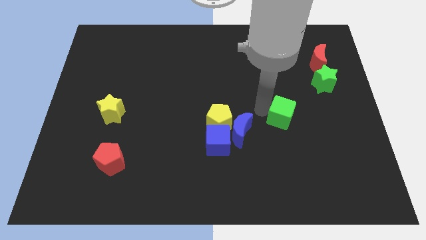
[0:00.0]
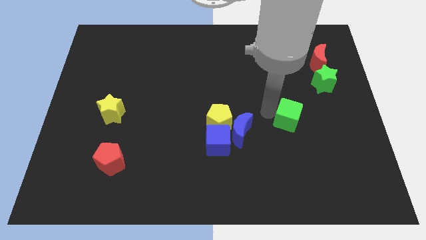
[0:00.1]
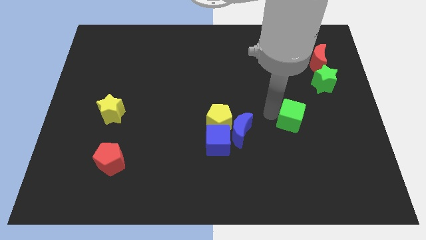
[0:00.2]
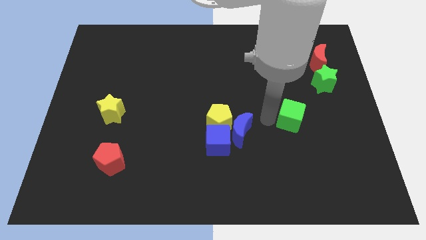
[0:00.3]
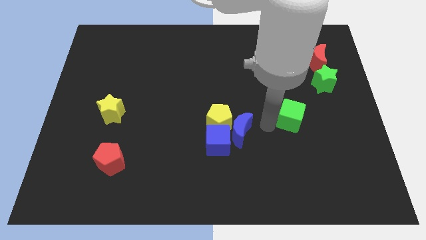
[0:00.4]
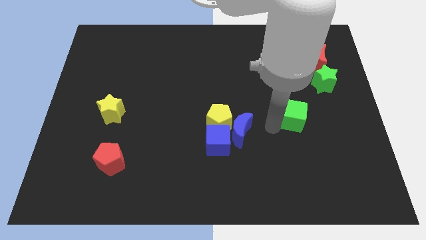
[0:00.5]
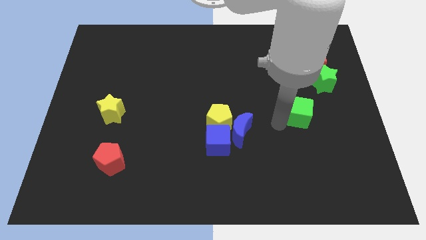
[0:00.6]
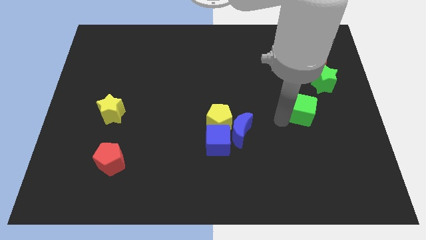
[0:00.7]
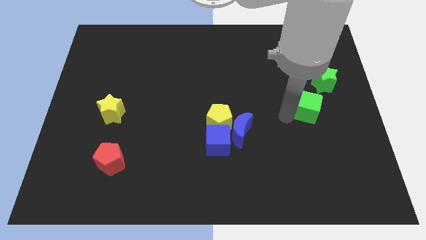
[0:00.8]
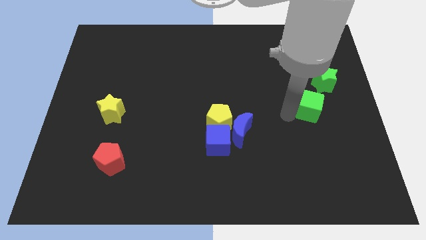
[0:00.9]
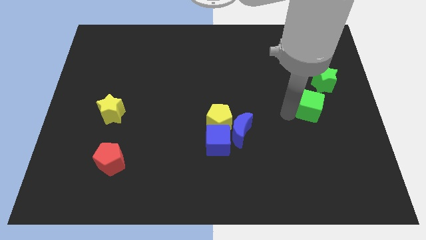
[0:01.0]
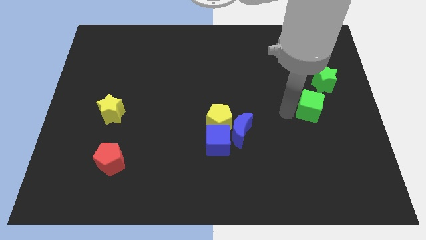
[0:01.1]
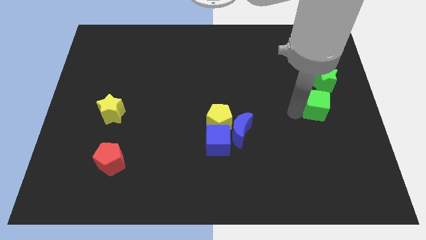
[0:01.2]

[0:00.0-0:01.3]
place the green cube diagonally at the bottom left of green star

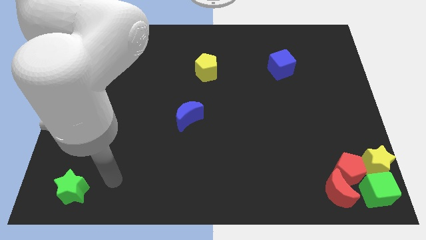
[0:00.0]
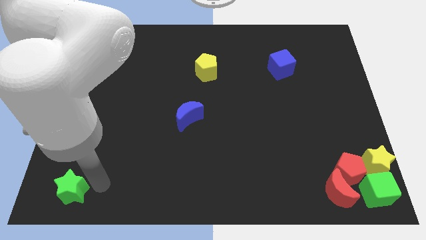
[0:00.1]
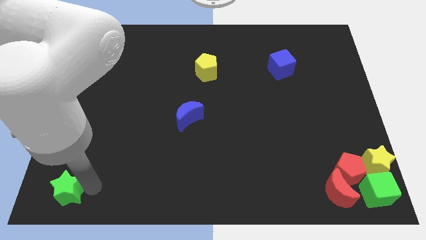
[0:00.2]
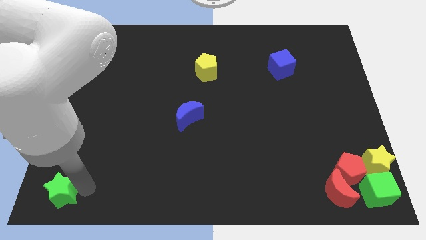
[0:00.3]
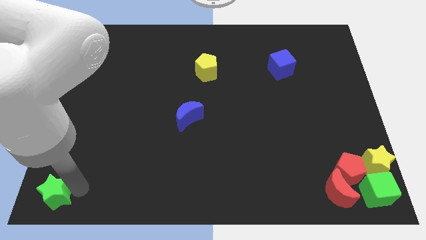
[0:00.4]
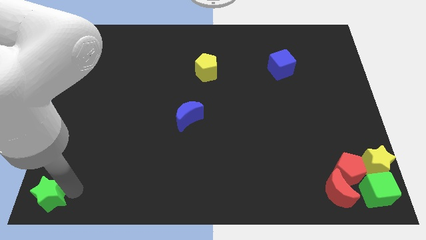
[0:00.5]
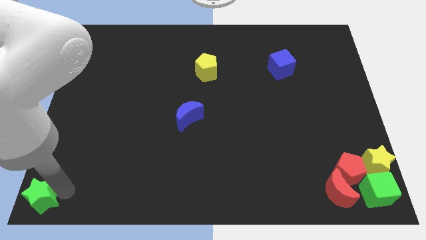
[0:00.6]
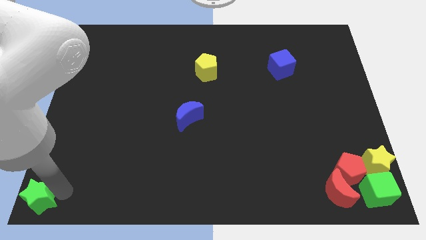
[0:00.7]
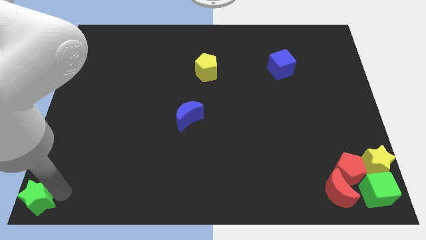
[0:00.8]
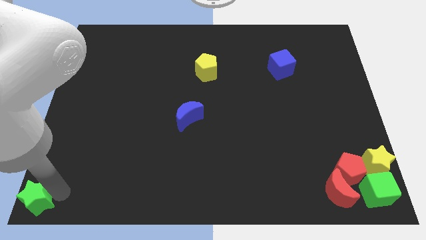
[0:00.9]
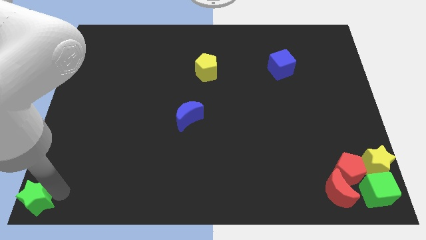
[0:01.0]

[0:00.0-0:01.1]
push the green star to the bottom left corner of the board

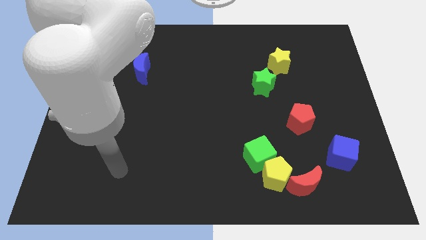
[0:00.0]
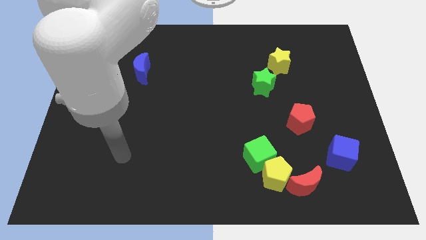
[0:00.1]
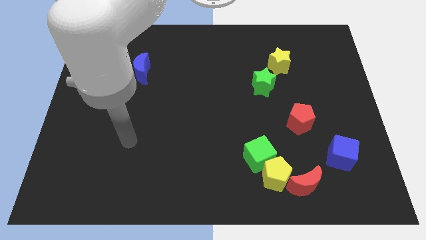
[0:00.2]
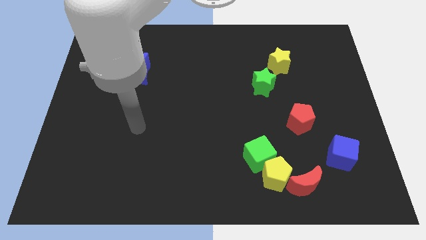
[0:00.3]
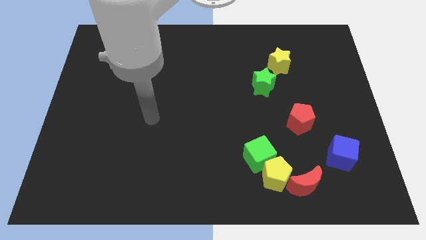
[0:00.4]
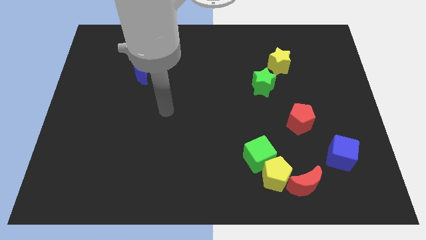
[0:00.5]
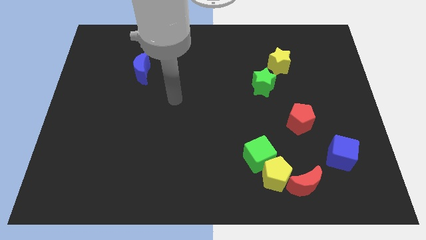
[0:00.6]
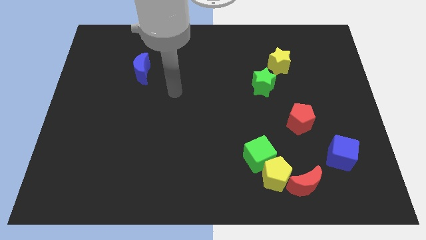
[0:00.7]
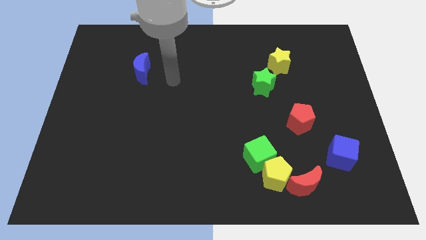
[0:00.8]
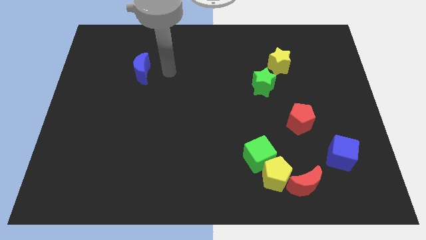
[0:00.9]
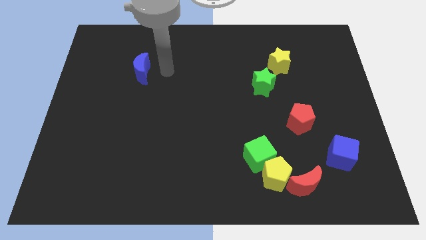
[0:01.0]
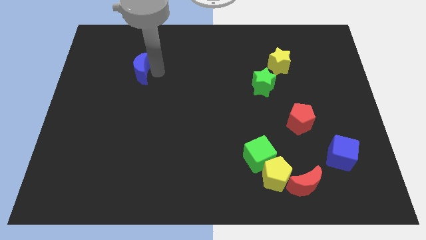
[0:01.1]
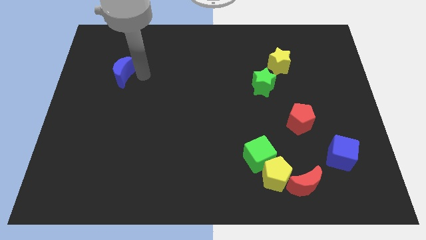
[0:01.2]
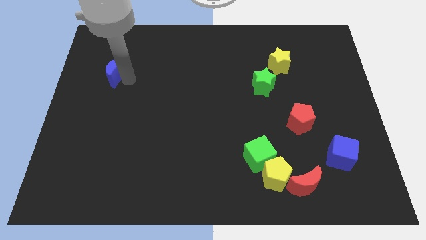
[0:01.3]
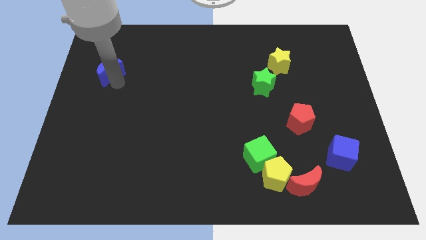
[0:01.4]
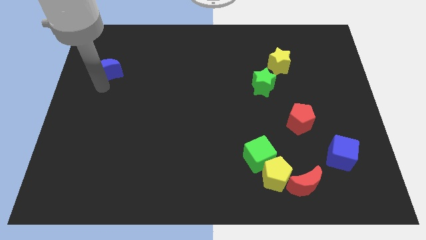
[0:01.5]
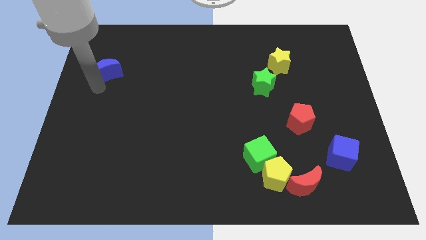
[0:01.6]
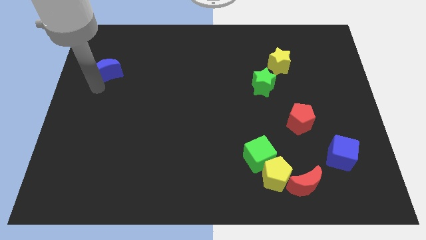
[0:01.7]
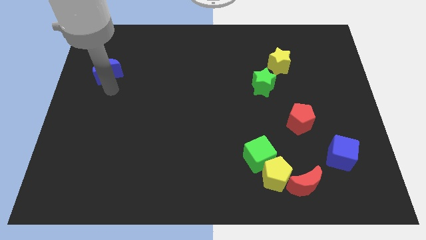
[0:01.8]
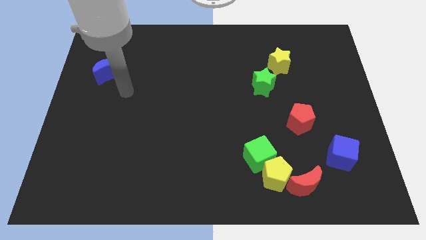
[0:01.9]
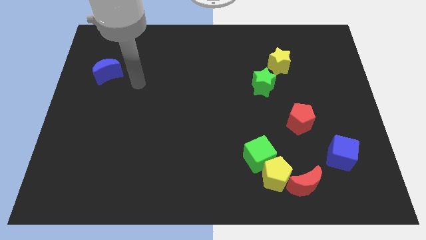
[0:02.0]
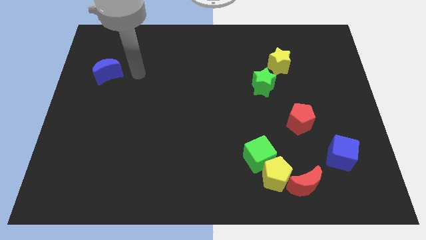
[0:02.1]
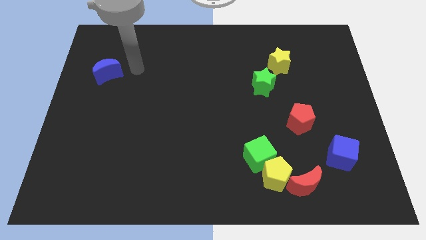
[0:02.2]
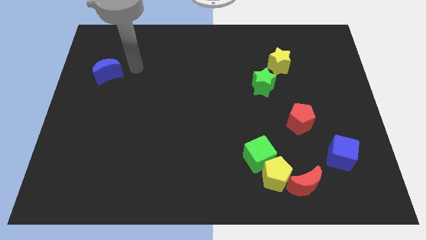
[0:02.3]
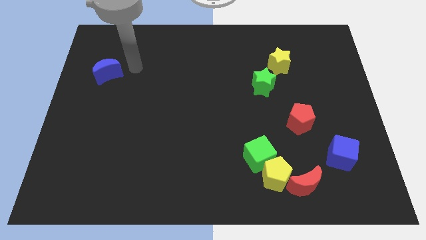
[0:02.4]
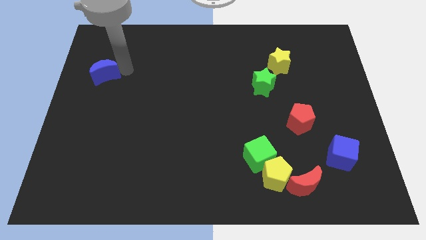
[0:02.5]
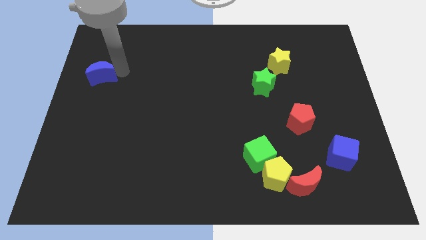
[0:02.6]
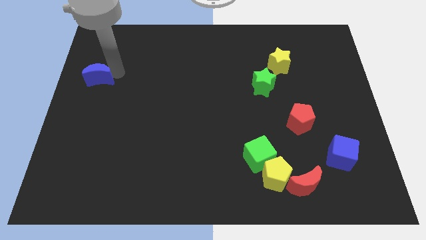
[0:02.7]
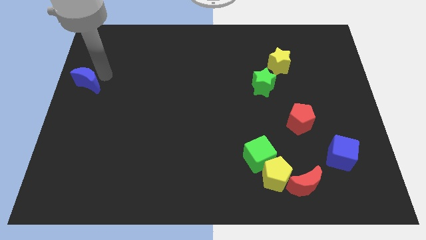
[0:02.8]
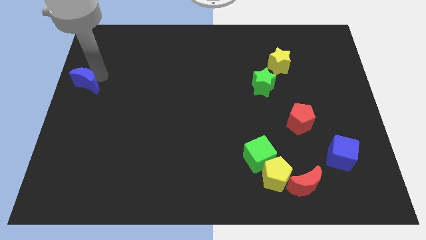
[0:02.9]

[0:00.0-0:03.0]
move the blue crescent towards left side

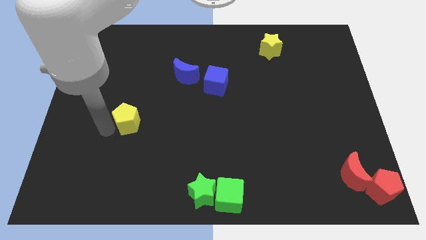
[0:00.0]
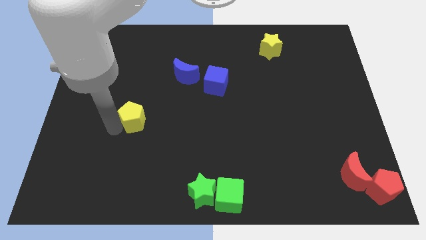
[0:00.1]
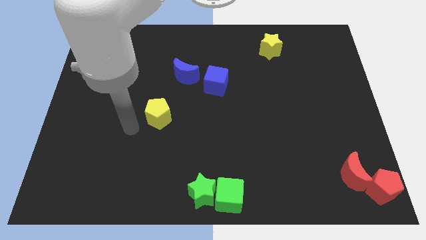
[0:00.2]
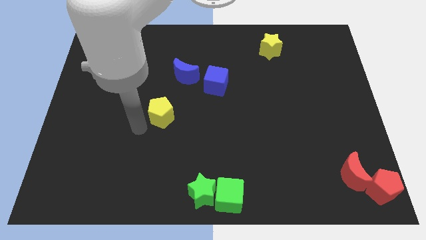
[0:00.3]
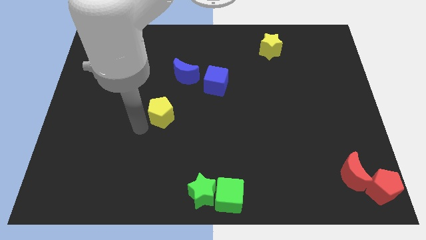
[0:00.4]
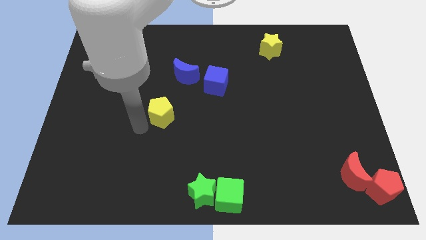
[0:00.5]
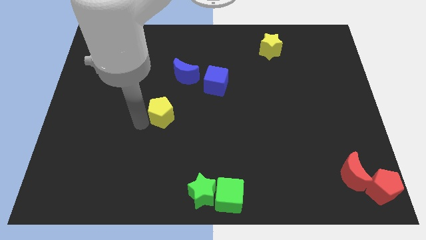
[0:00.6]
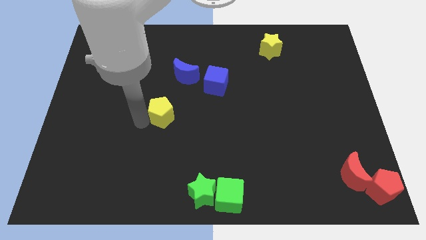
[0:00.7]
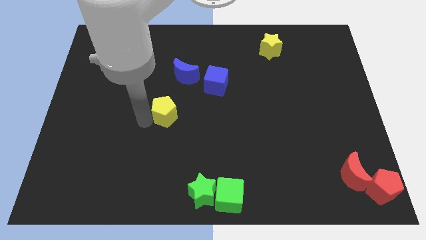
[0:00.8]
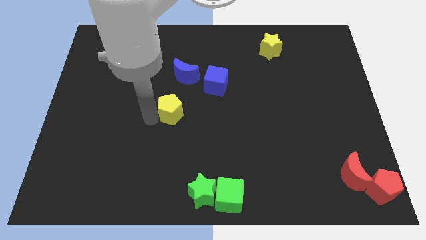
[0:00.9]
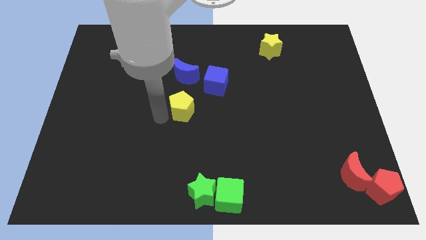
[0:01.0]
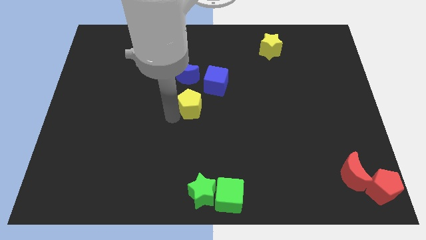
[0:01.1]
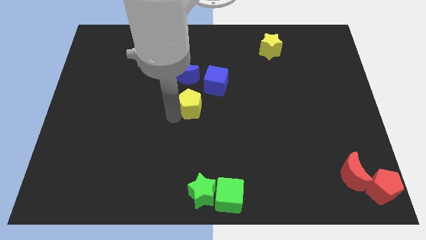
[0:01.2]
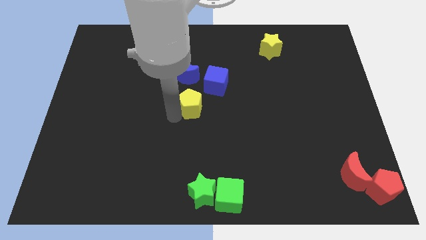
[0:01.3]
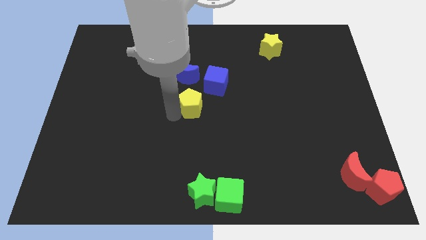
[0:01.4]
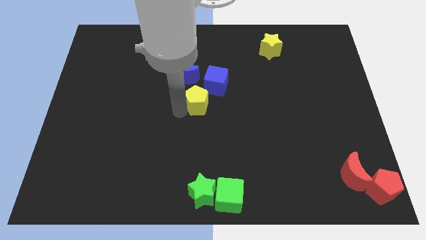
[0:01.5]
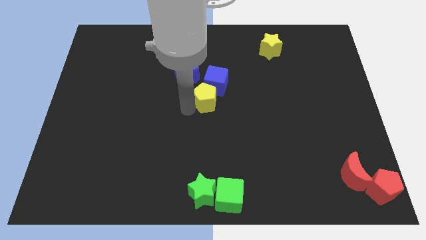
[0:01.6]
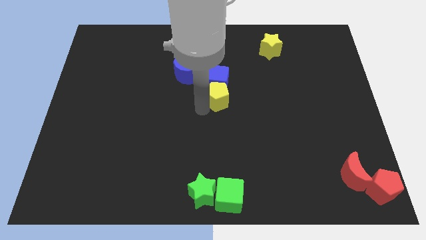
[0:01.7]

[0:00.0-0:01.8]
move the yellow pentagon below the blue cube

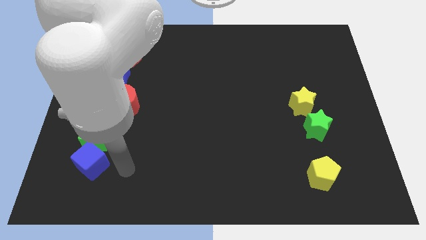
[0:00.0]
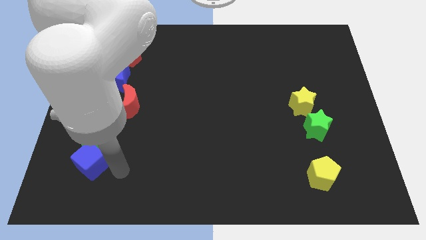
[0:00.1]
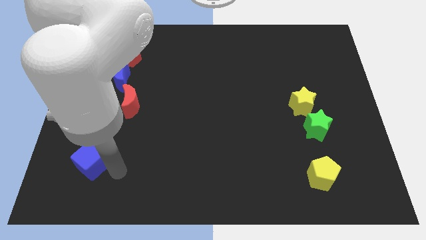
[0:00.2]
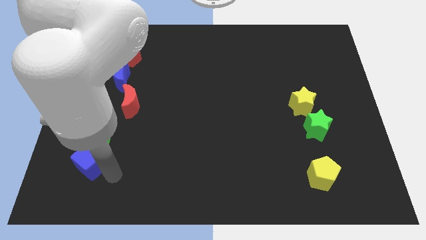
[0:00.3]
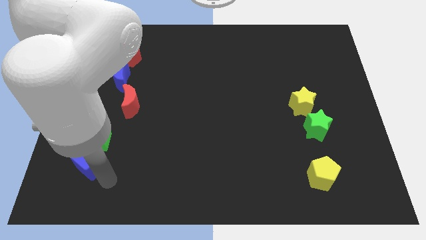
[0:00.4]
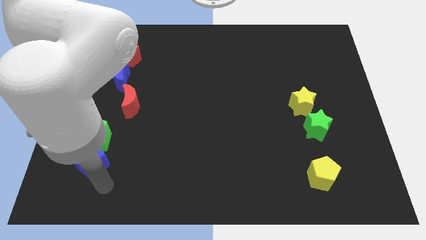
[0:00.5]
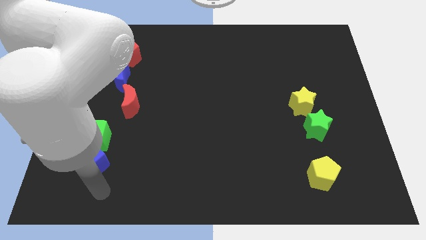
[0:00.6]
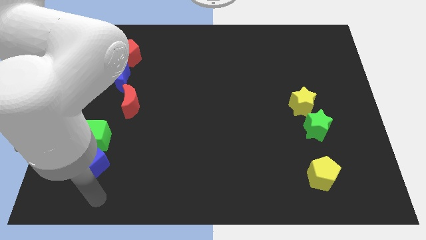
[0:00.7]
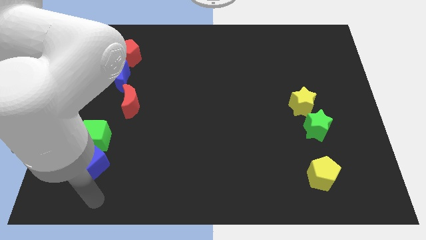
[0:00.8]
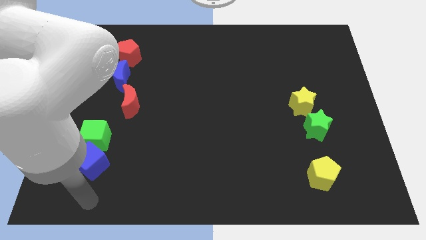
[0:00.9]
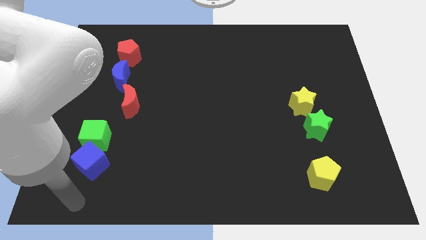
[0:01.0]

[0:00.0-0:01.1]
place your arm to the bottom of the blue cube

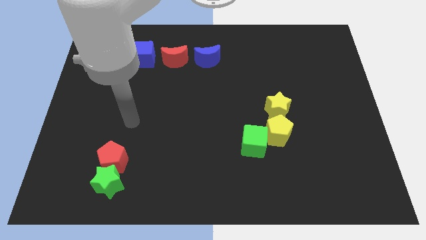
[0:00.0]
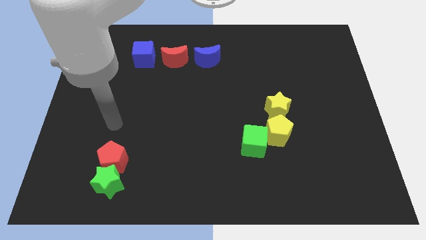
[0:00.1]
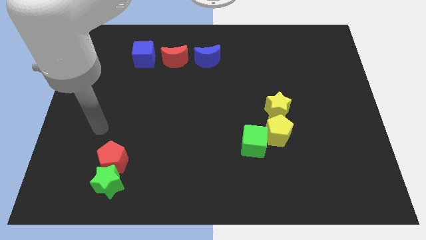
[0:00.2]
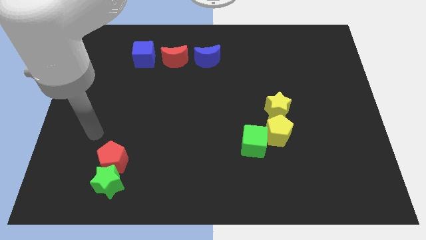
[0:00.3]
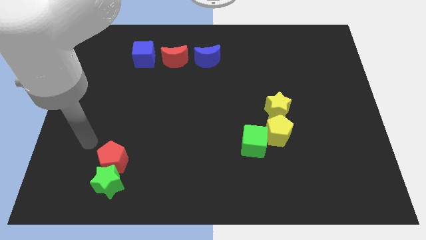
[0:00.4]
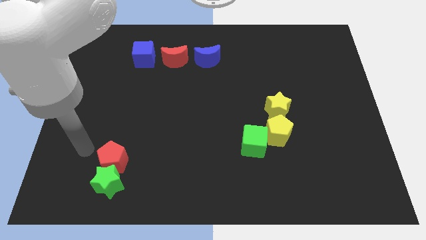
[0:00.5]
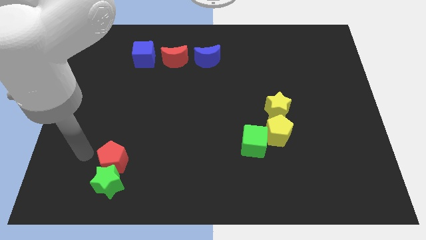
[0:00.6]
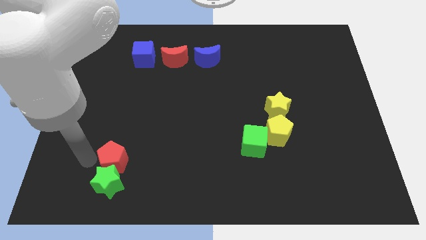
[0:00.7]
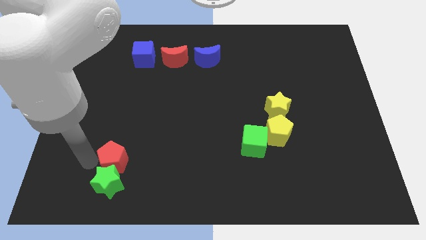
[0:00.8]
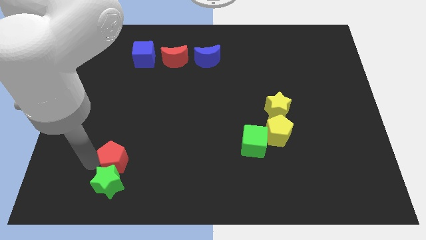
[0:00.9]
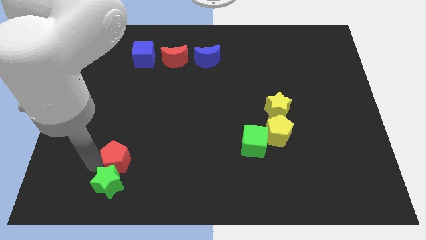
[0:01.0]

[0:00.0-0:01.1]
place arm at the left side of red pentagon
